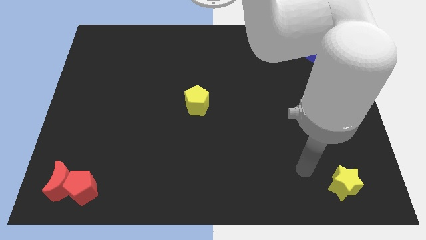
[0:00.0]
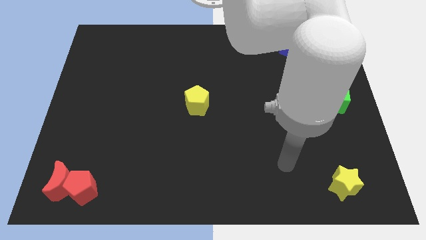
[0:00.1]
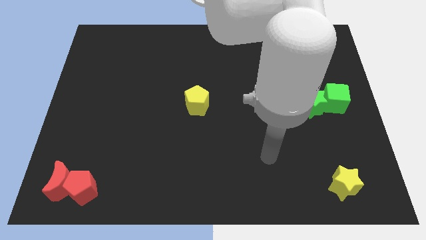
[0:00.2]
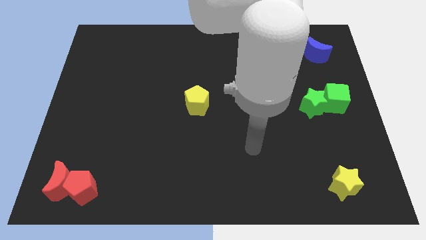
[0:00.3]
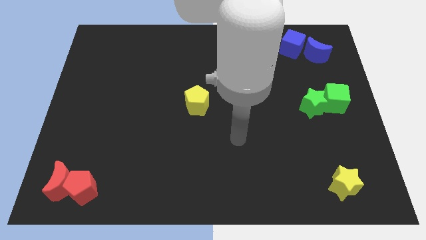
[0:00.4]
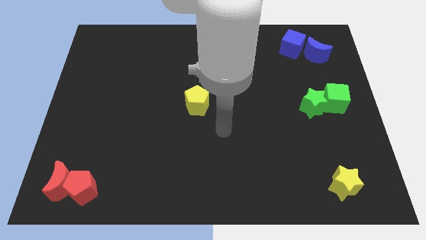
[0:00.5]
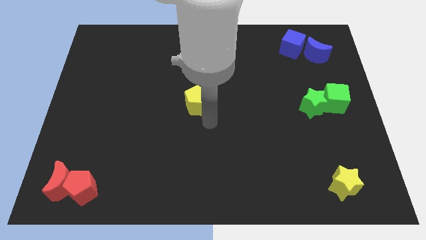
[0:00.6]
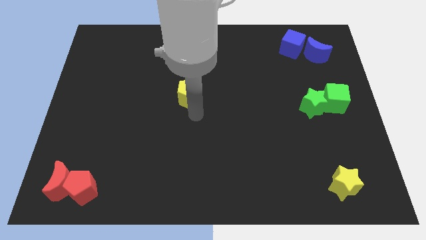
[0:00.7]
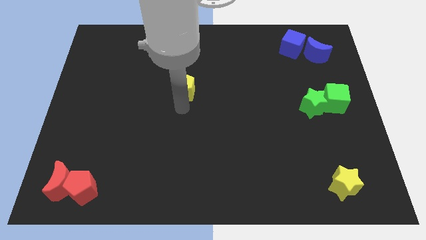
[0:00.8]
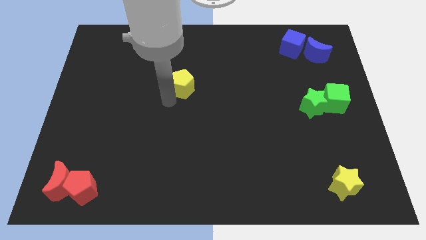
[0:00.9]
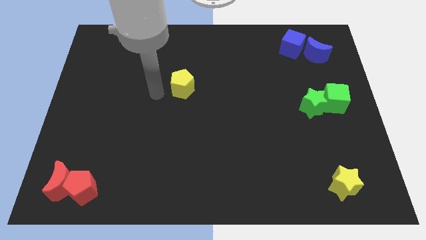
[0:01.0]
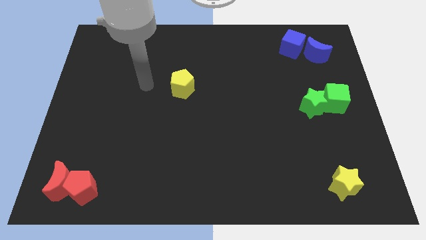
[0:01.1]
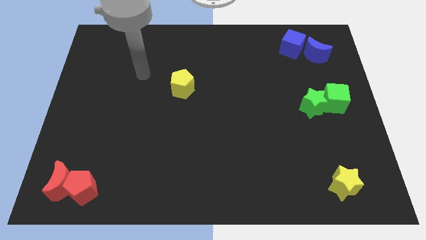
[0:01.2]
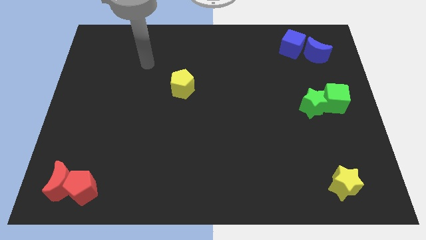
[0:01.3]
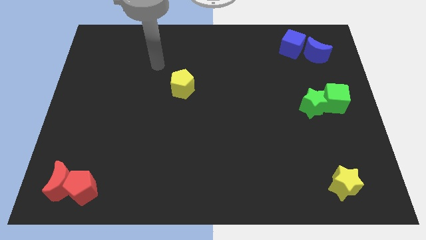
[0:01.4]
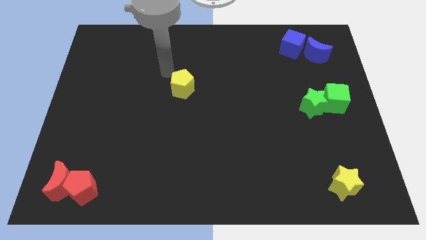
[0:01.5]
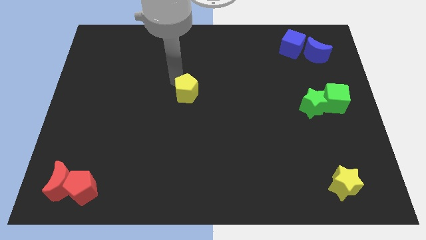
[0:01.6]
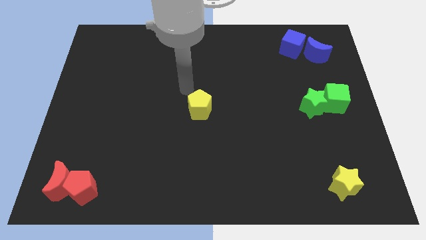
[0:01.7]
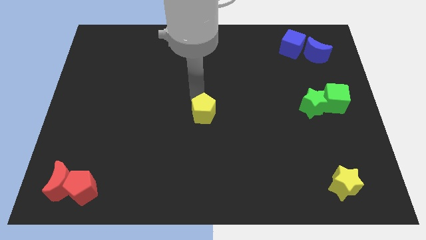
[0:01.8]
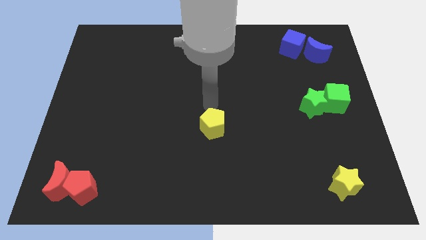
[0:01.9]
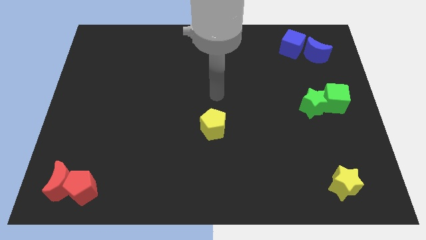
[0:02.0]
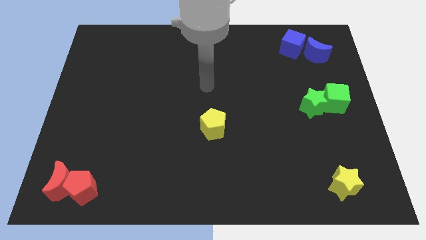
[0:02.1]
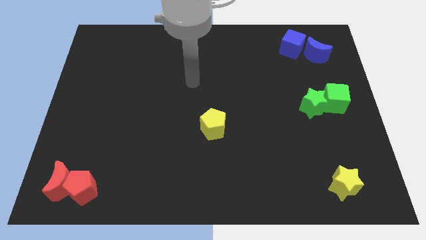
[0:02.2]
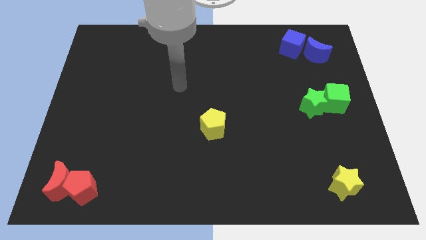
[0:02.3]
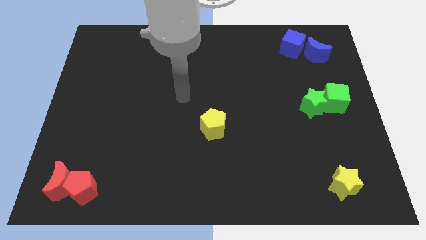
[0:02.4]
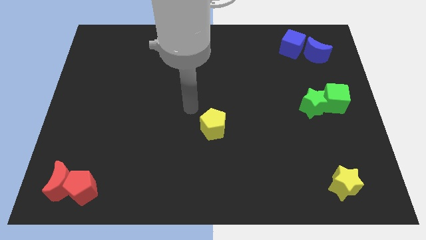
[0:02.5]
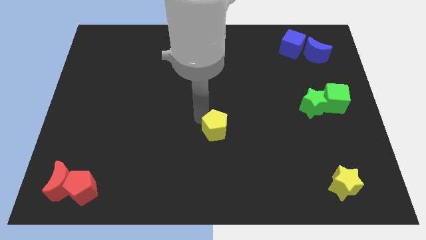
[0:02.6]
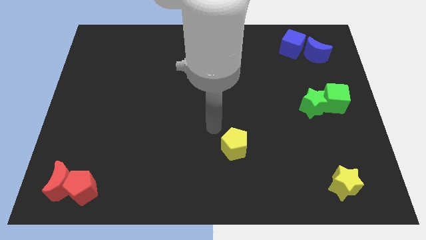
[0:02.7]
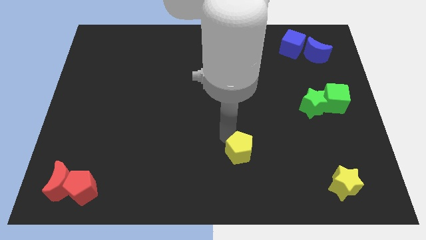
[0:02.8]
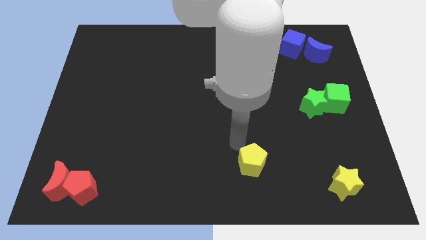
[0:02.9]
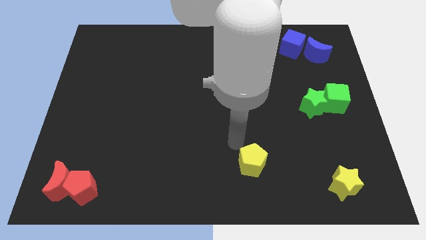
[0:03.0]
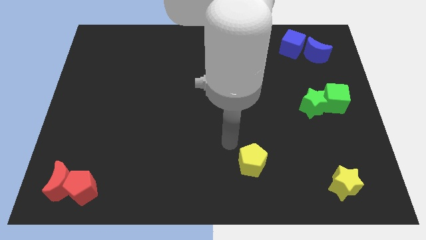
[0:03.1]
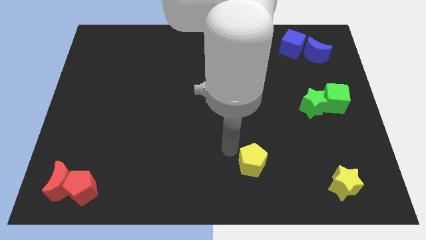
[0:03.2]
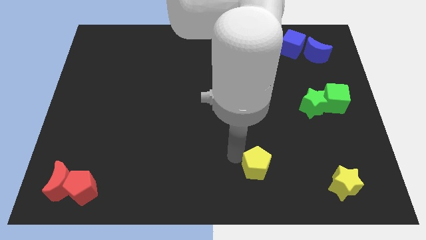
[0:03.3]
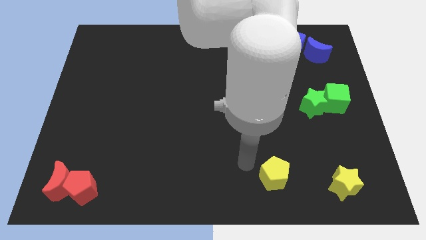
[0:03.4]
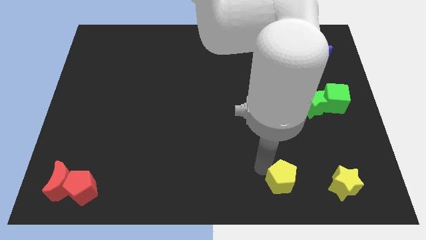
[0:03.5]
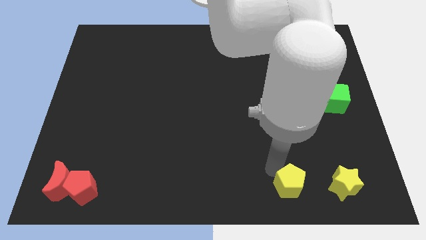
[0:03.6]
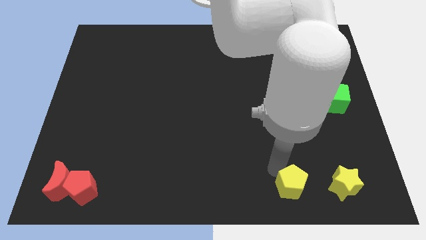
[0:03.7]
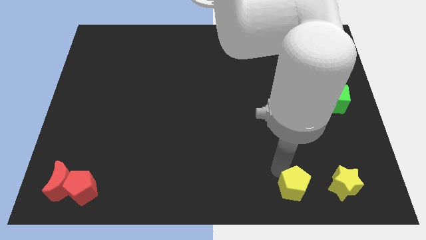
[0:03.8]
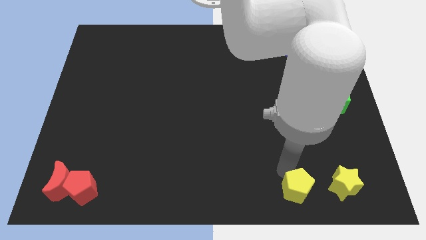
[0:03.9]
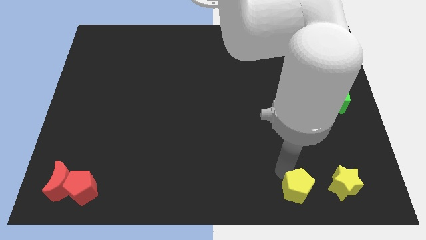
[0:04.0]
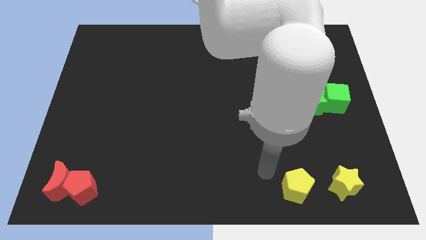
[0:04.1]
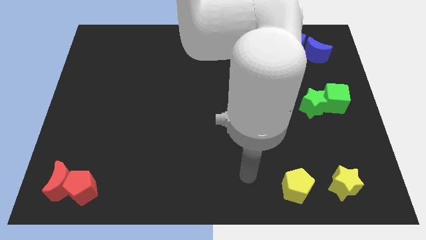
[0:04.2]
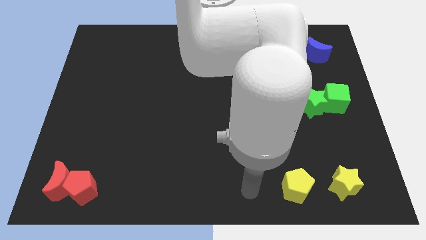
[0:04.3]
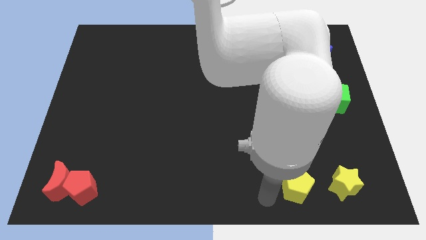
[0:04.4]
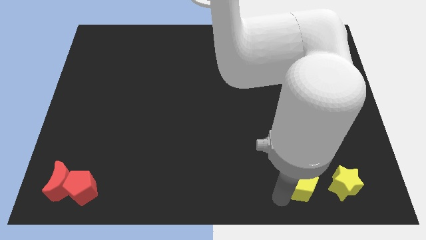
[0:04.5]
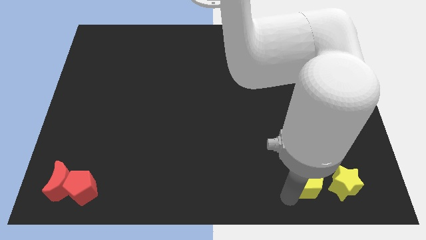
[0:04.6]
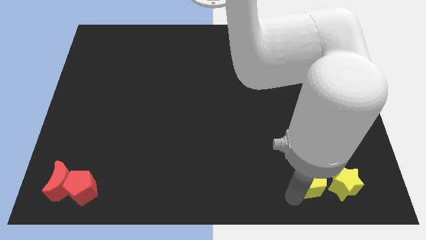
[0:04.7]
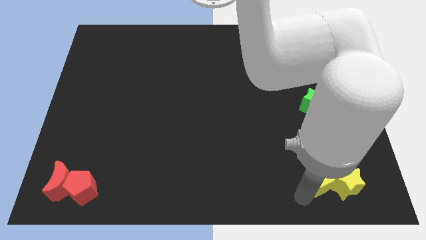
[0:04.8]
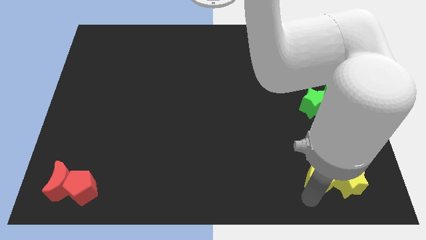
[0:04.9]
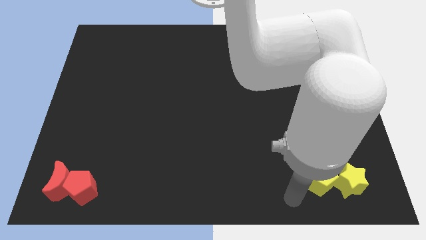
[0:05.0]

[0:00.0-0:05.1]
push the yellow pentagon into the yellow star

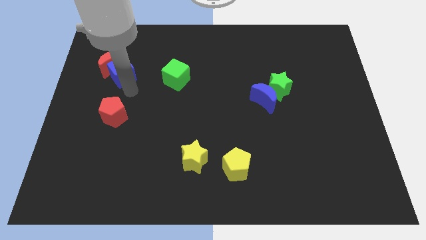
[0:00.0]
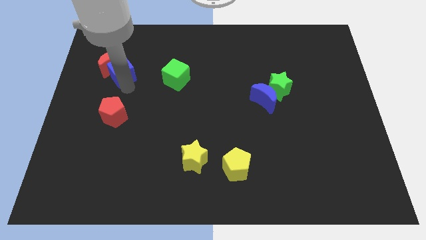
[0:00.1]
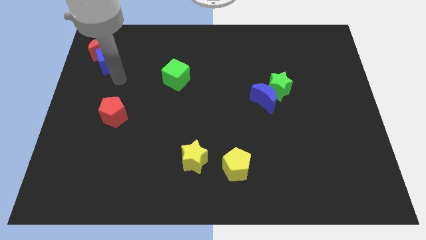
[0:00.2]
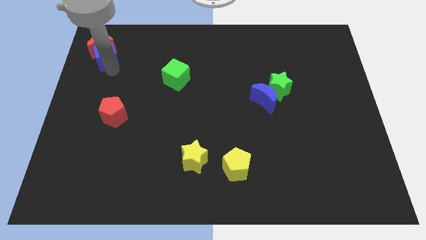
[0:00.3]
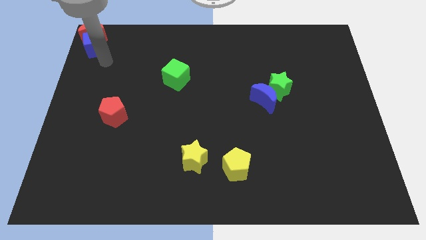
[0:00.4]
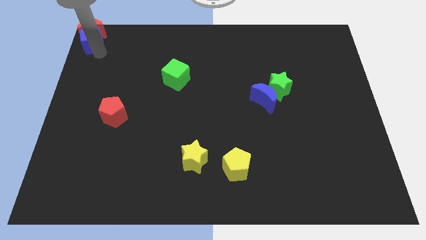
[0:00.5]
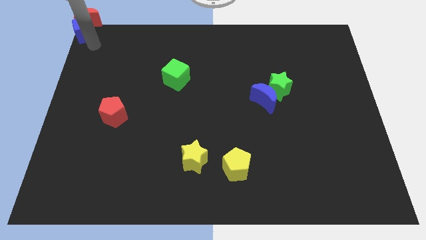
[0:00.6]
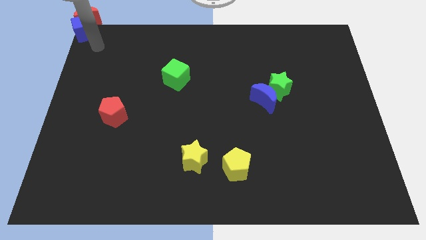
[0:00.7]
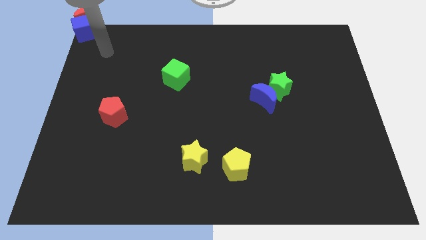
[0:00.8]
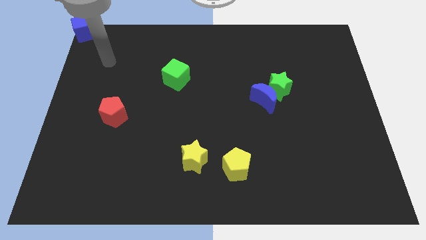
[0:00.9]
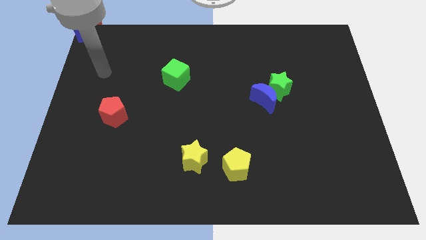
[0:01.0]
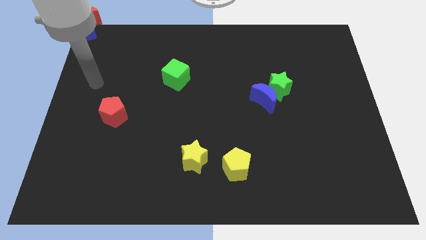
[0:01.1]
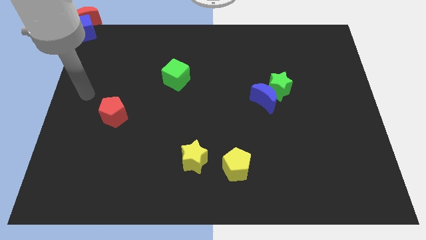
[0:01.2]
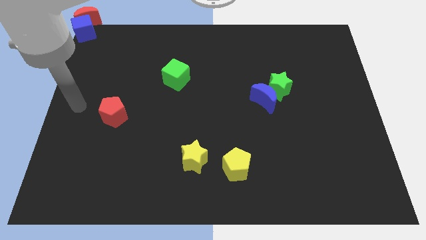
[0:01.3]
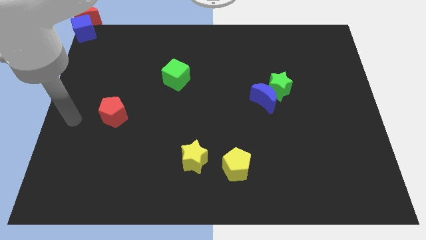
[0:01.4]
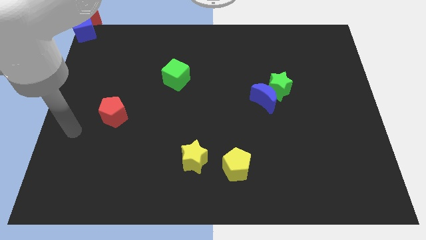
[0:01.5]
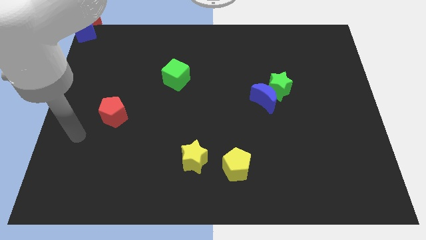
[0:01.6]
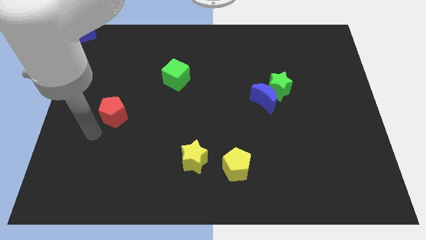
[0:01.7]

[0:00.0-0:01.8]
place the red crescent and blue cube to the top left corner

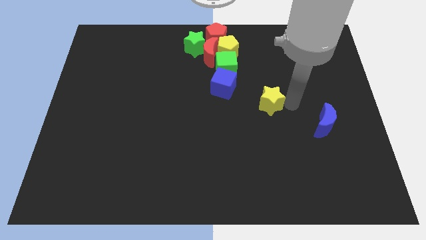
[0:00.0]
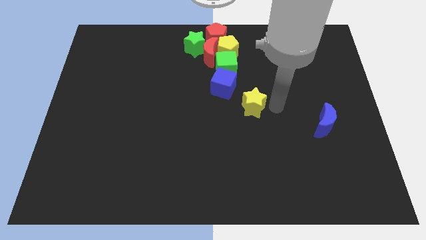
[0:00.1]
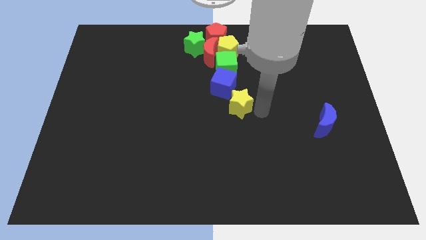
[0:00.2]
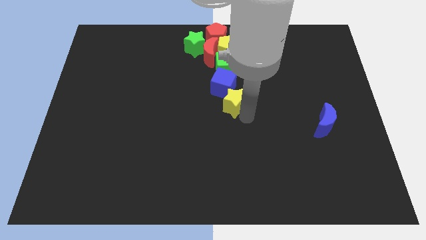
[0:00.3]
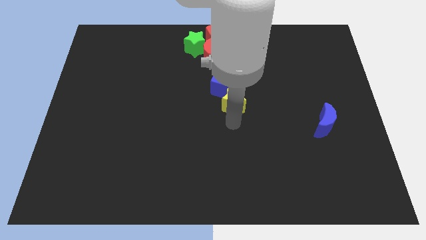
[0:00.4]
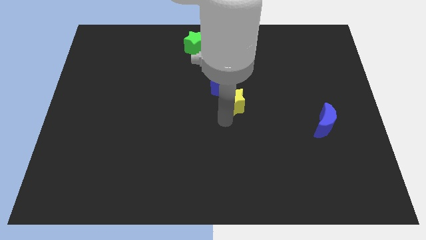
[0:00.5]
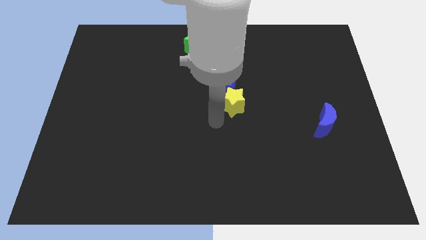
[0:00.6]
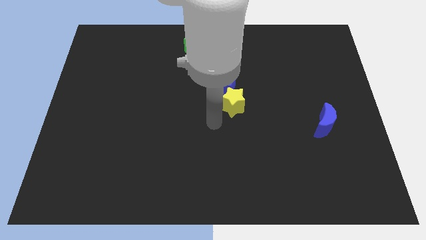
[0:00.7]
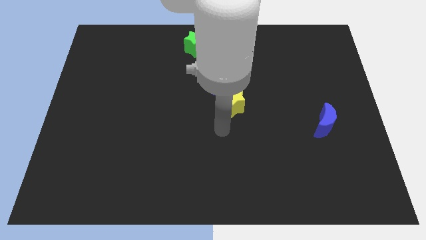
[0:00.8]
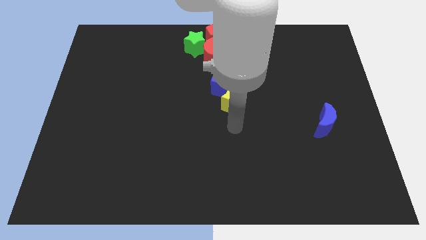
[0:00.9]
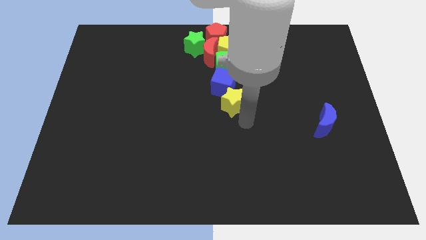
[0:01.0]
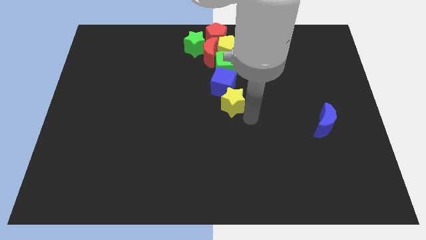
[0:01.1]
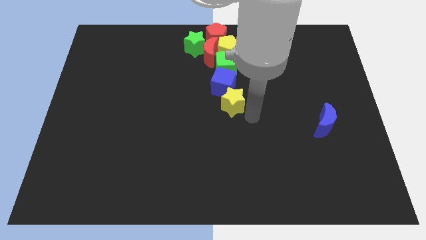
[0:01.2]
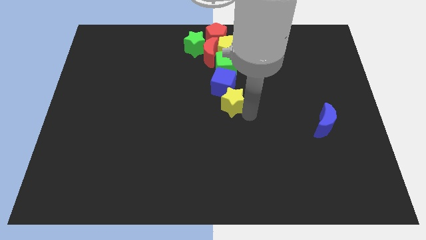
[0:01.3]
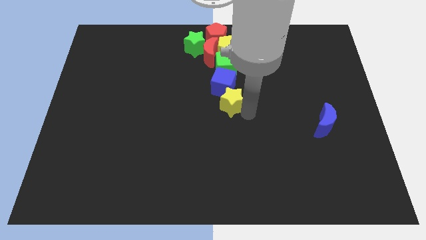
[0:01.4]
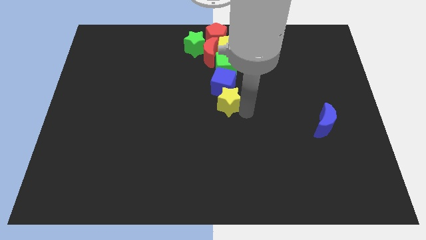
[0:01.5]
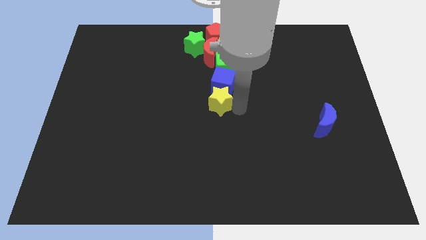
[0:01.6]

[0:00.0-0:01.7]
bring the yellow star at the bottom side of the blue cube

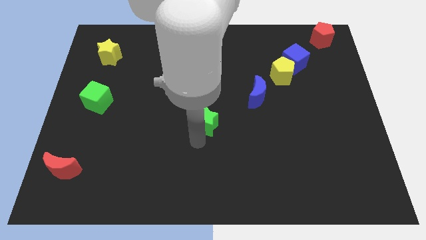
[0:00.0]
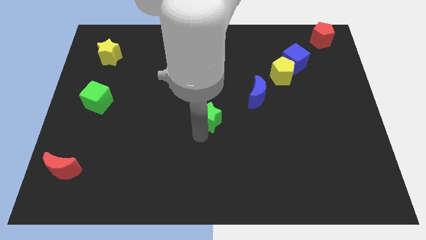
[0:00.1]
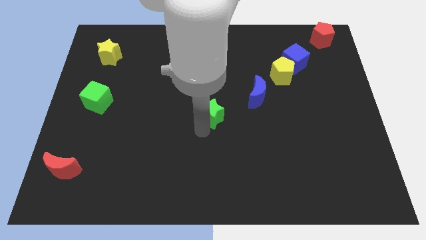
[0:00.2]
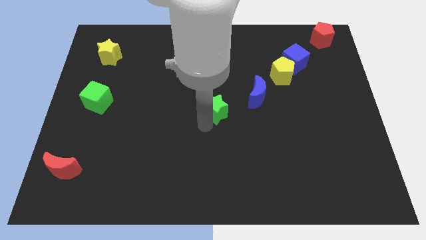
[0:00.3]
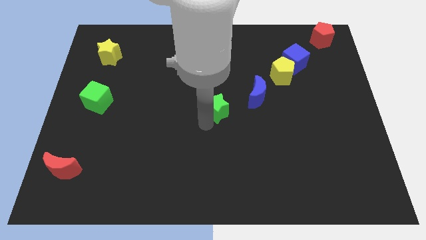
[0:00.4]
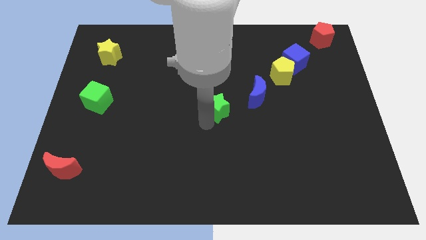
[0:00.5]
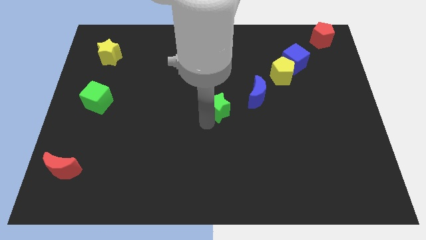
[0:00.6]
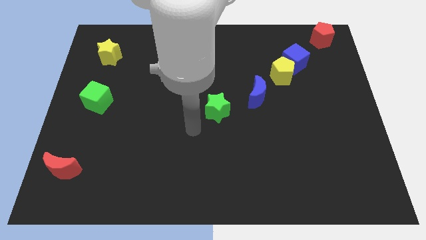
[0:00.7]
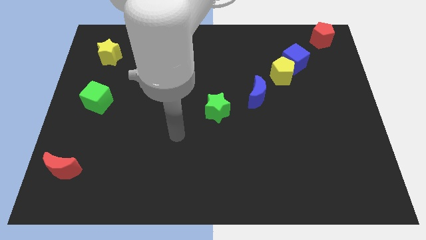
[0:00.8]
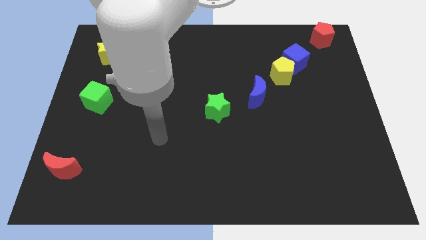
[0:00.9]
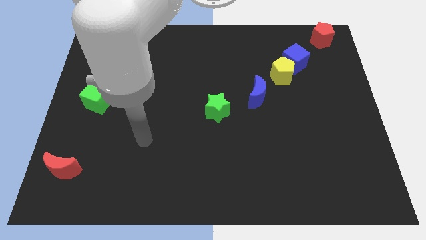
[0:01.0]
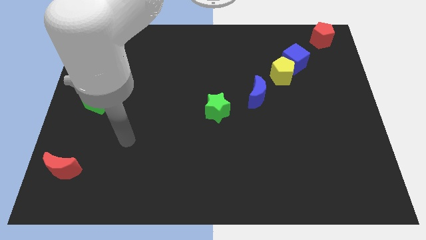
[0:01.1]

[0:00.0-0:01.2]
put the green star to the right of the green cube
